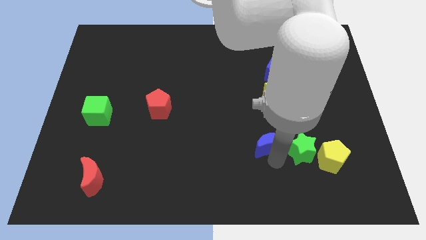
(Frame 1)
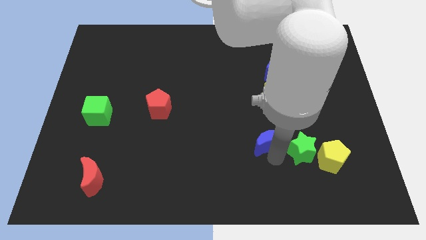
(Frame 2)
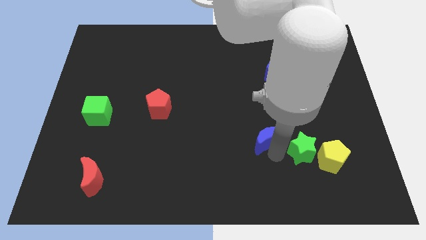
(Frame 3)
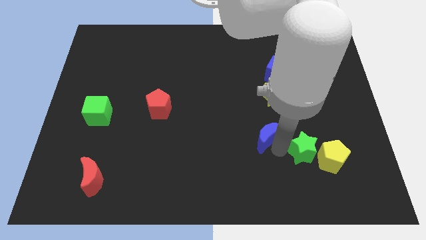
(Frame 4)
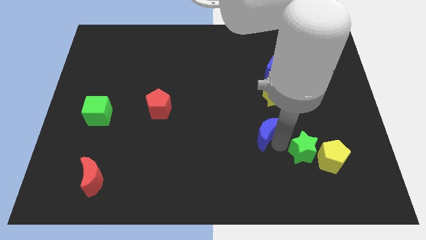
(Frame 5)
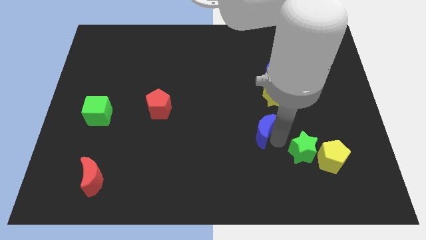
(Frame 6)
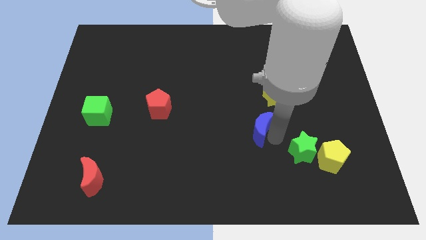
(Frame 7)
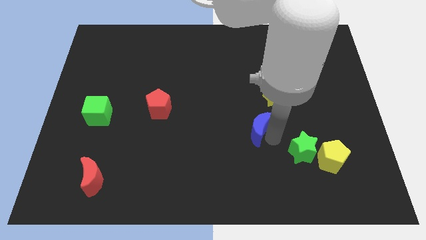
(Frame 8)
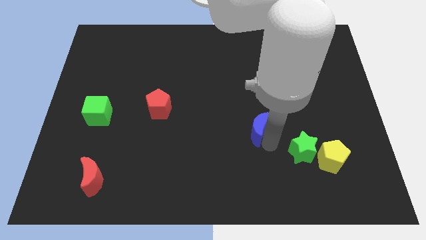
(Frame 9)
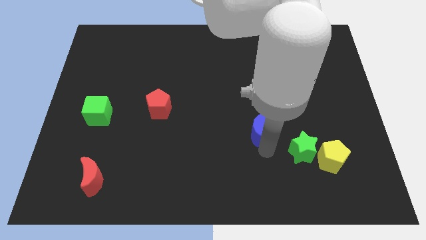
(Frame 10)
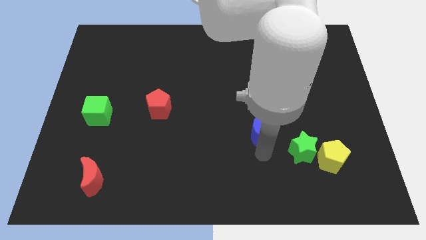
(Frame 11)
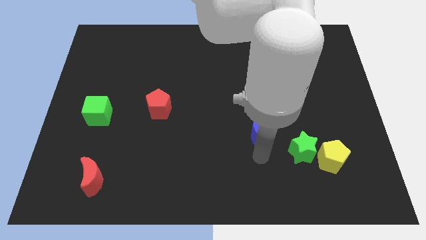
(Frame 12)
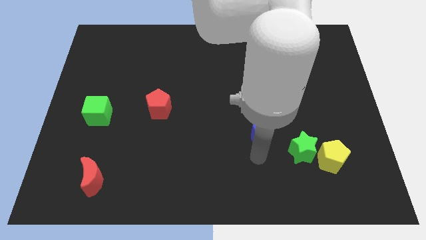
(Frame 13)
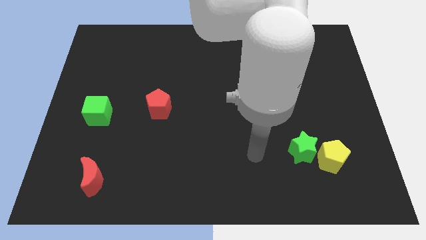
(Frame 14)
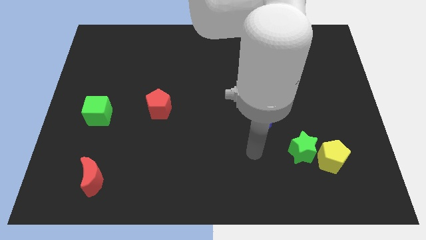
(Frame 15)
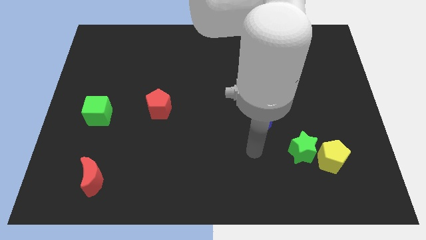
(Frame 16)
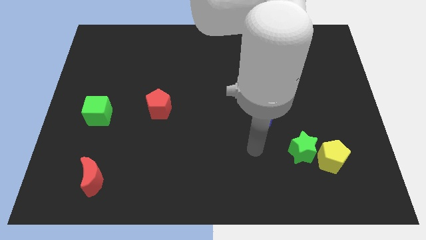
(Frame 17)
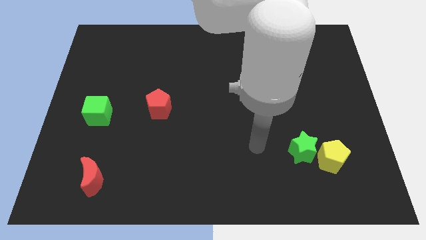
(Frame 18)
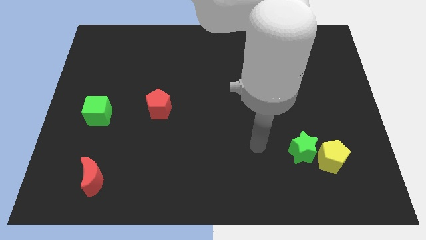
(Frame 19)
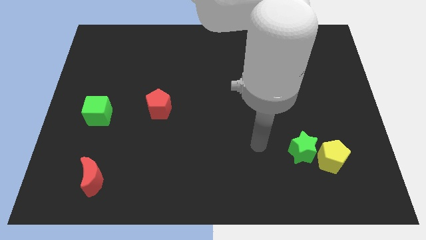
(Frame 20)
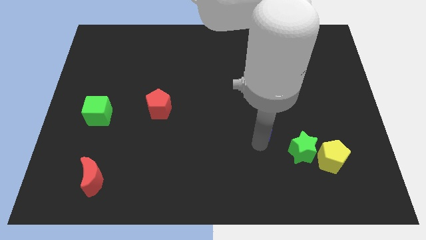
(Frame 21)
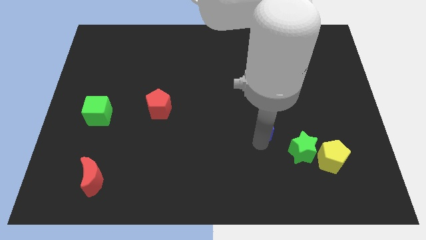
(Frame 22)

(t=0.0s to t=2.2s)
separate blue cube from the green star

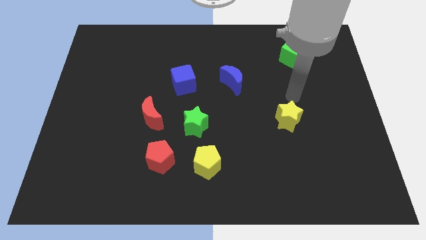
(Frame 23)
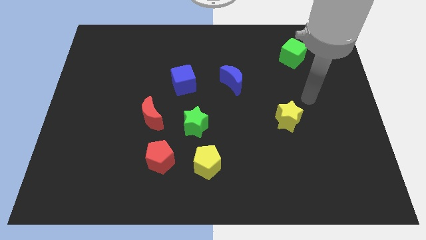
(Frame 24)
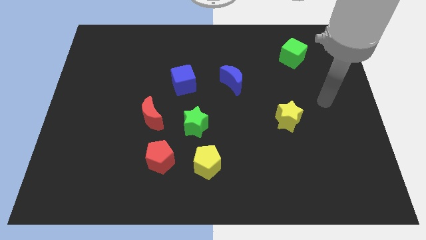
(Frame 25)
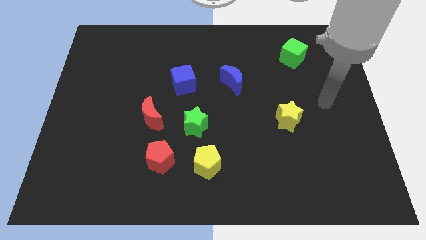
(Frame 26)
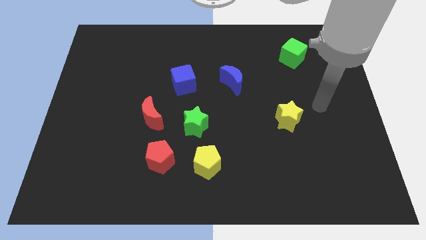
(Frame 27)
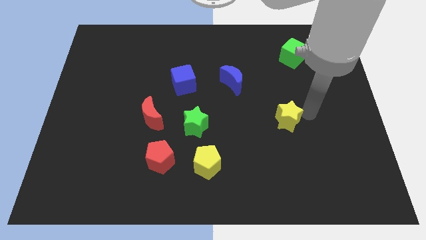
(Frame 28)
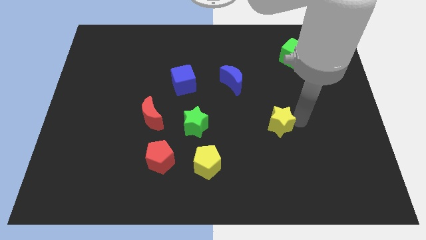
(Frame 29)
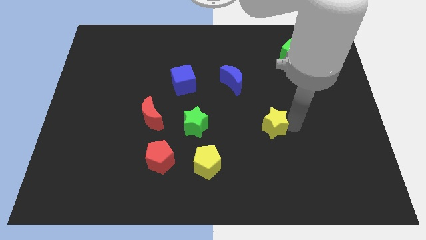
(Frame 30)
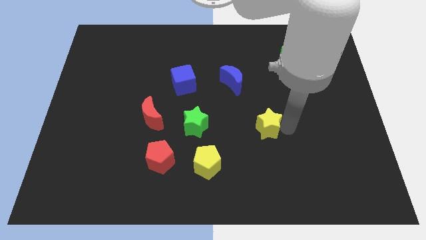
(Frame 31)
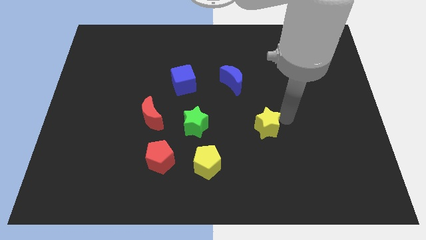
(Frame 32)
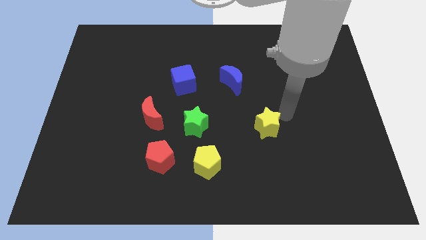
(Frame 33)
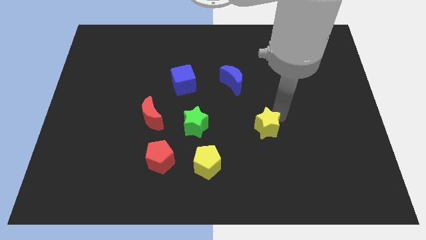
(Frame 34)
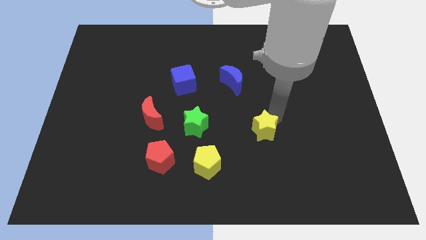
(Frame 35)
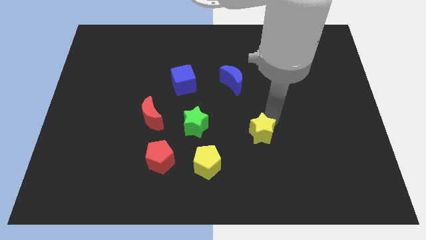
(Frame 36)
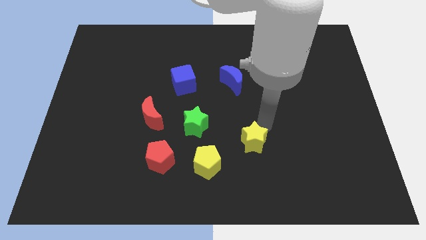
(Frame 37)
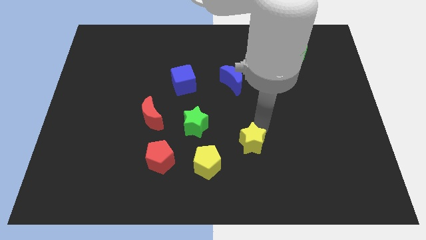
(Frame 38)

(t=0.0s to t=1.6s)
move yellow star near yellow pentagon

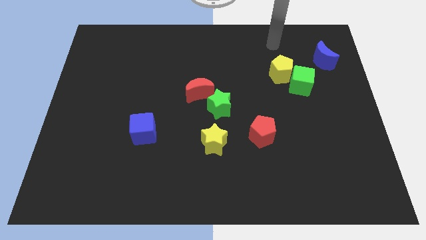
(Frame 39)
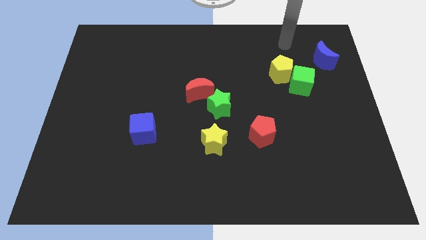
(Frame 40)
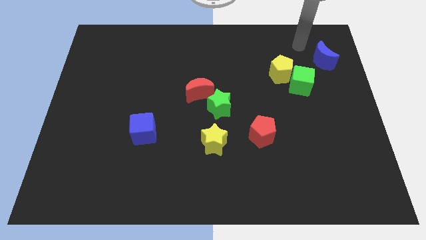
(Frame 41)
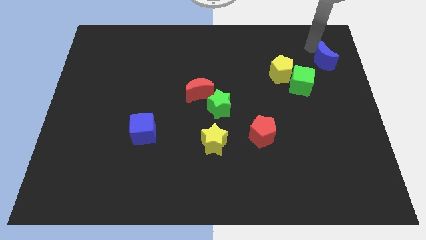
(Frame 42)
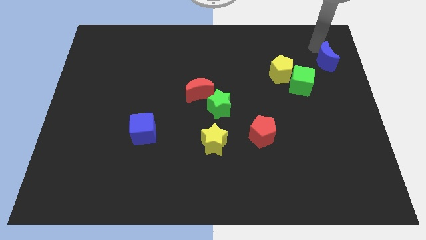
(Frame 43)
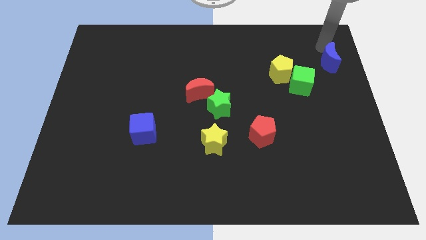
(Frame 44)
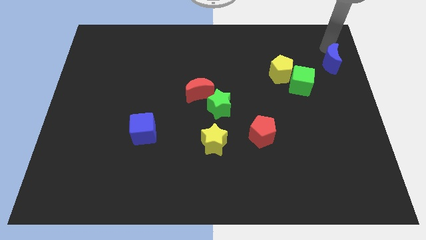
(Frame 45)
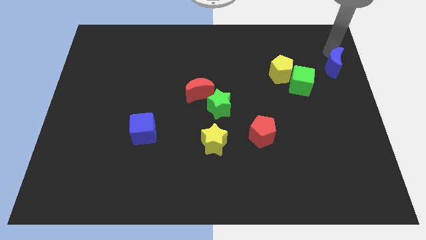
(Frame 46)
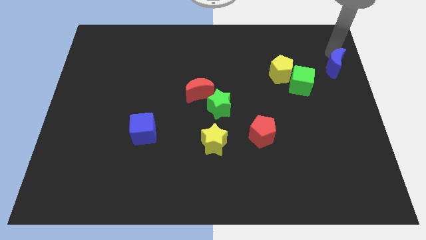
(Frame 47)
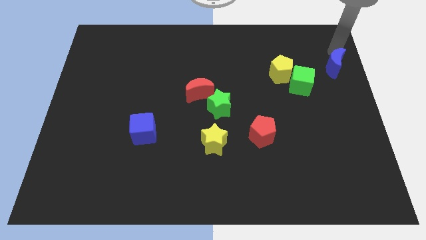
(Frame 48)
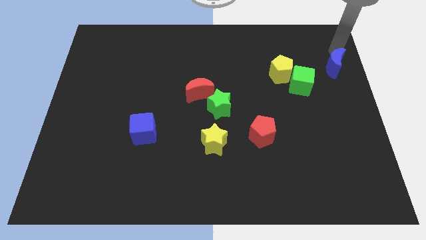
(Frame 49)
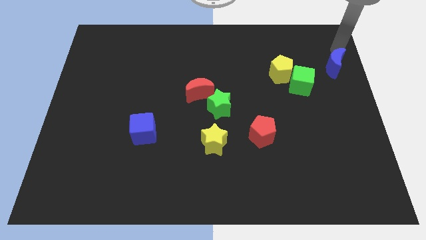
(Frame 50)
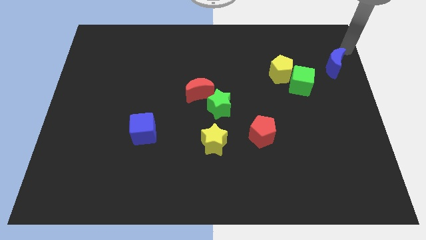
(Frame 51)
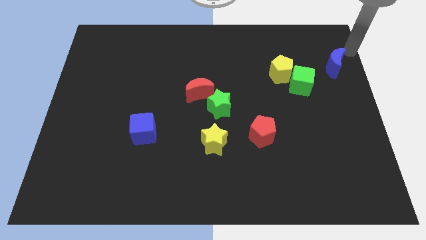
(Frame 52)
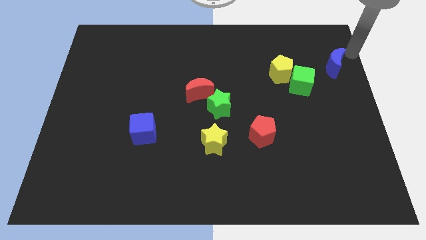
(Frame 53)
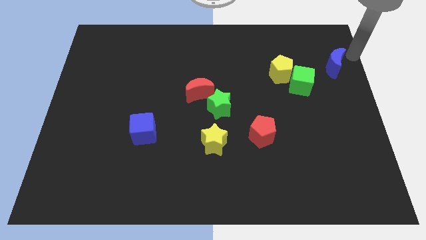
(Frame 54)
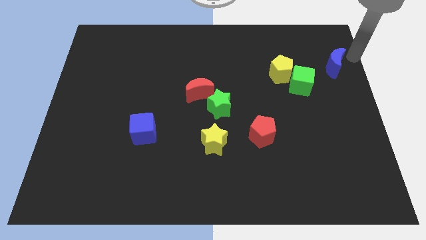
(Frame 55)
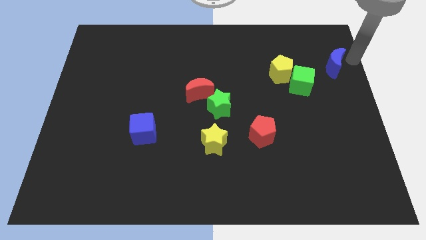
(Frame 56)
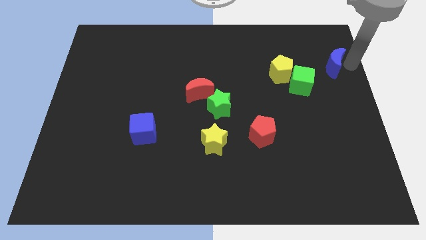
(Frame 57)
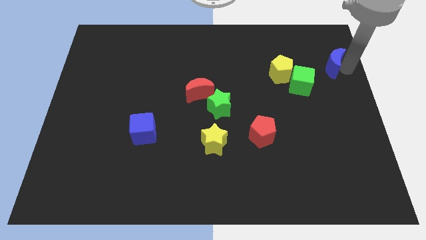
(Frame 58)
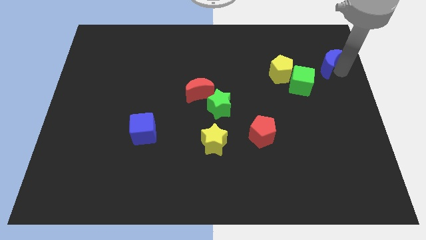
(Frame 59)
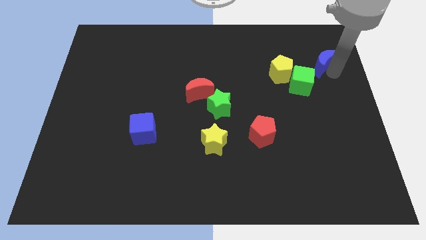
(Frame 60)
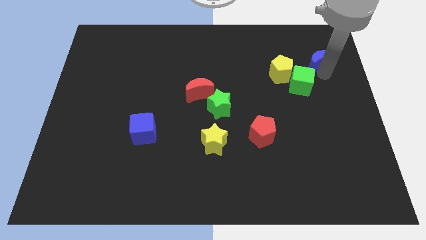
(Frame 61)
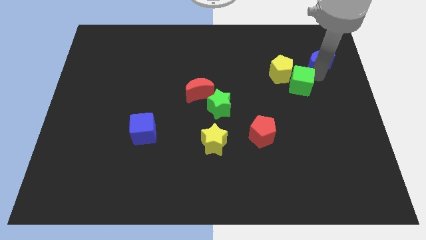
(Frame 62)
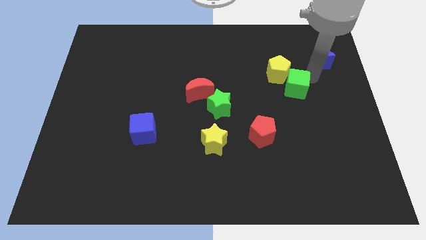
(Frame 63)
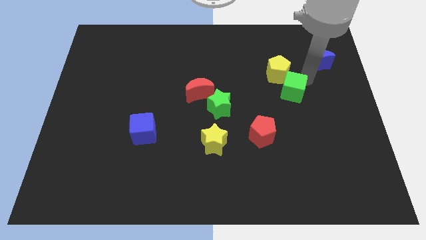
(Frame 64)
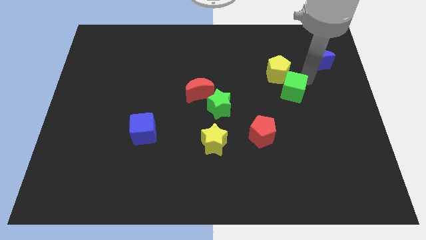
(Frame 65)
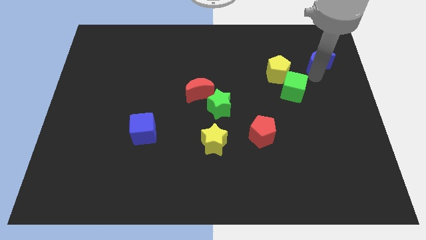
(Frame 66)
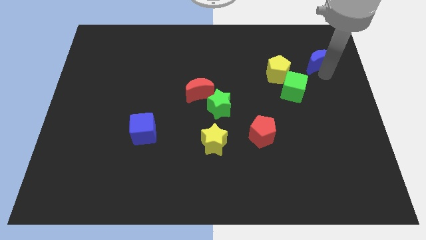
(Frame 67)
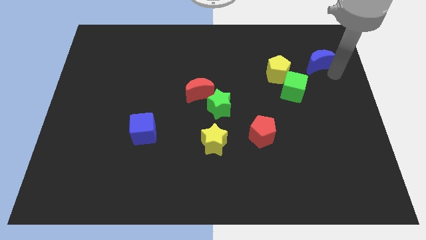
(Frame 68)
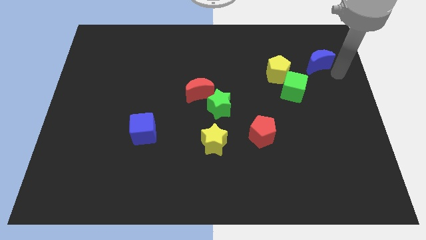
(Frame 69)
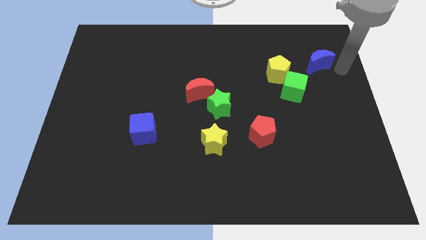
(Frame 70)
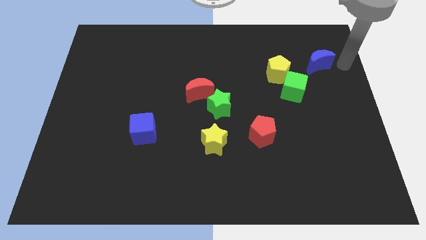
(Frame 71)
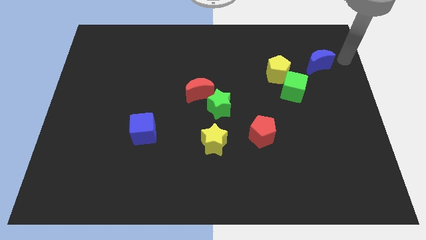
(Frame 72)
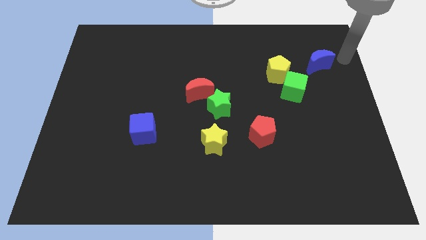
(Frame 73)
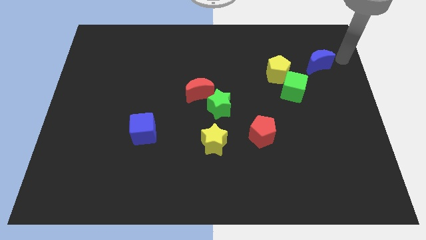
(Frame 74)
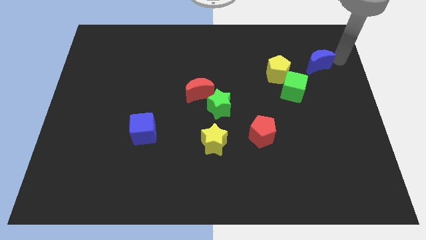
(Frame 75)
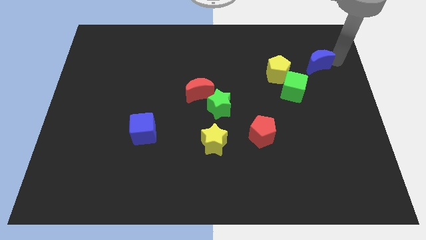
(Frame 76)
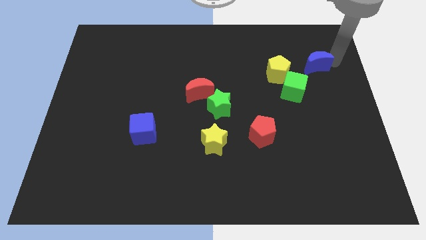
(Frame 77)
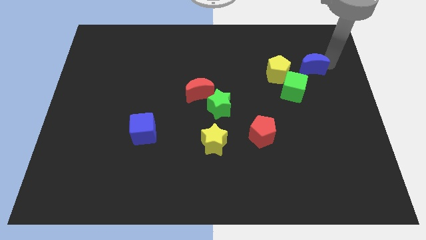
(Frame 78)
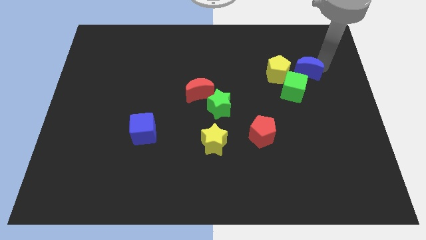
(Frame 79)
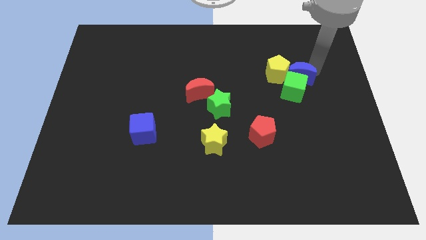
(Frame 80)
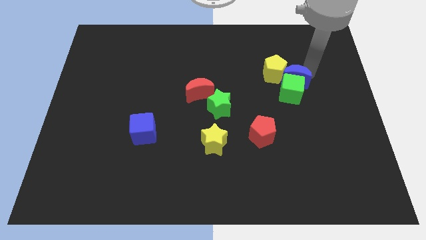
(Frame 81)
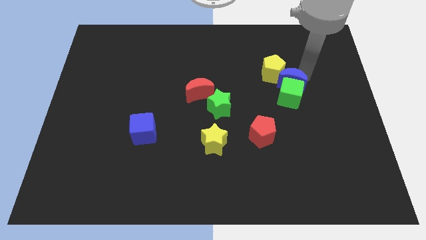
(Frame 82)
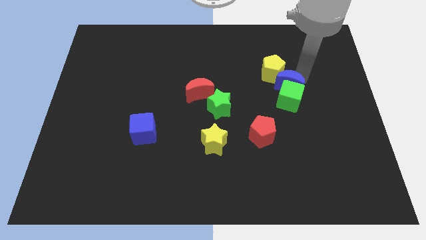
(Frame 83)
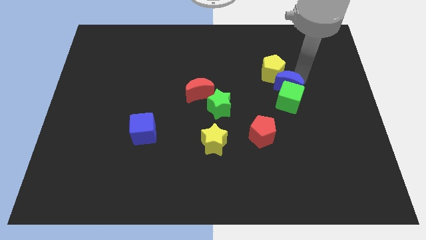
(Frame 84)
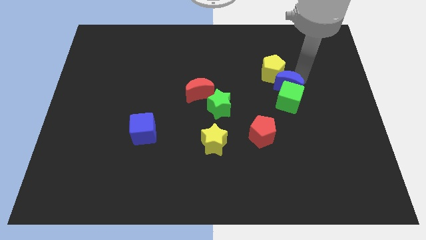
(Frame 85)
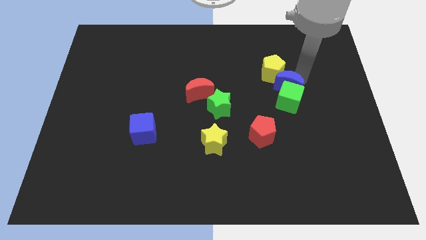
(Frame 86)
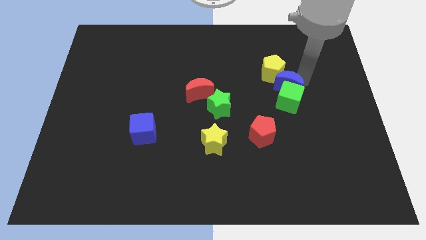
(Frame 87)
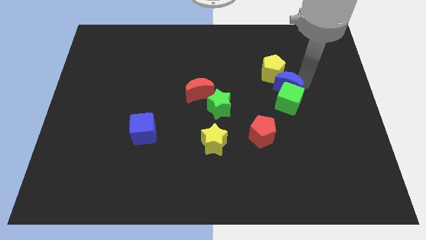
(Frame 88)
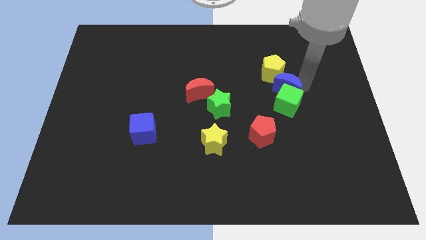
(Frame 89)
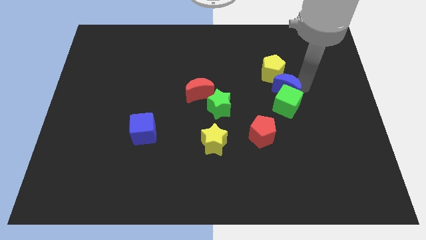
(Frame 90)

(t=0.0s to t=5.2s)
push the blue moon into the green cube

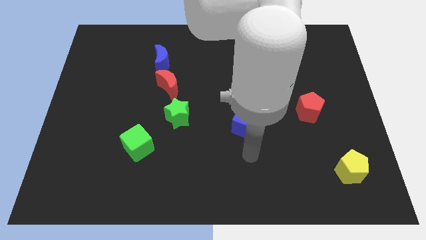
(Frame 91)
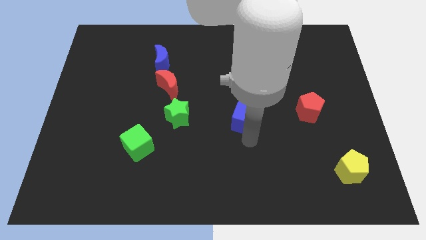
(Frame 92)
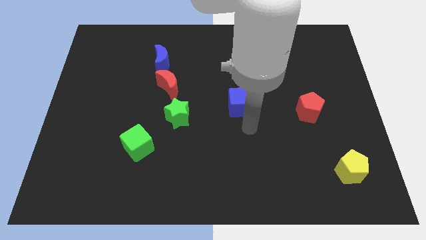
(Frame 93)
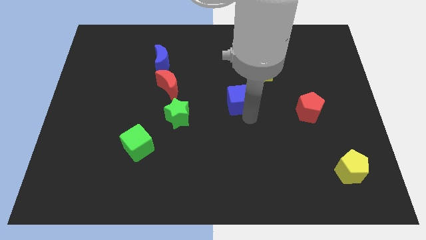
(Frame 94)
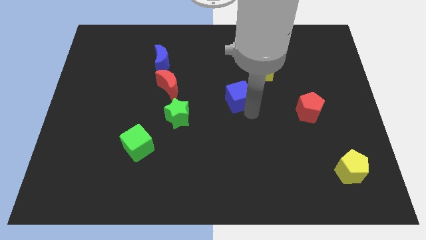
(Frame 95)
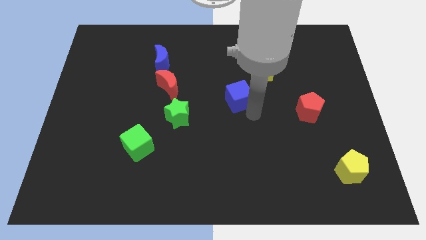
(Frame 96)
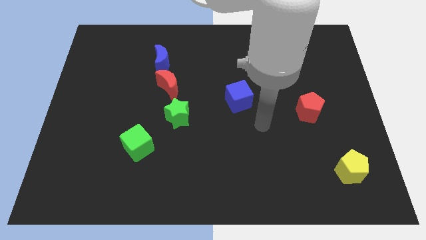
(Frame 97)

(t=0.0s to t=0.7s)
move the blue cube slightly upwards
